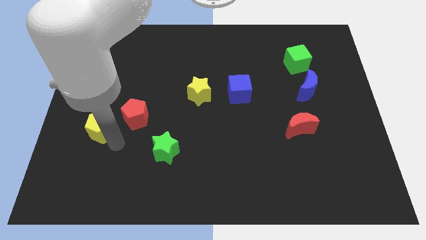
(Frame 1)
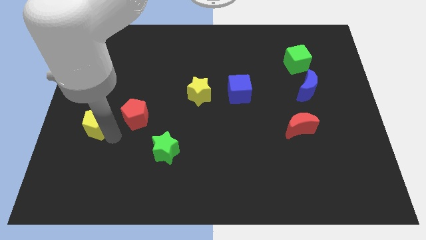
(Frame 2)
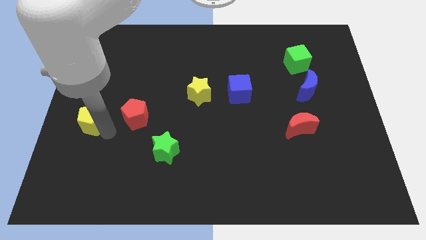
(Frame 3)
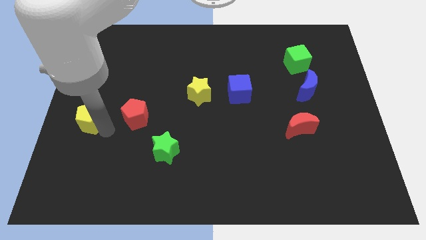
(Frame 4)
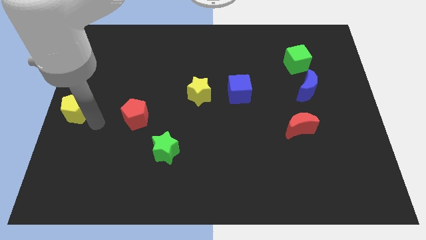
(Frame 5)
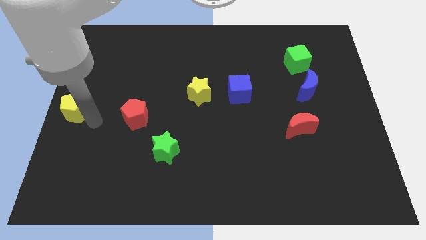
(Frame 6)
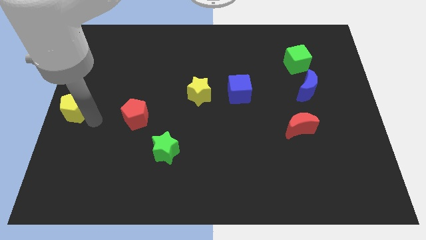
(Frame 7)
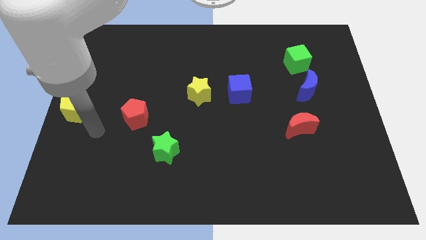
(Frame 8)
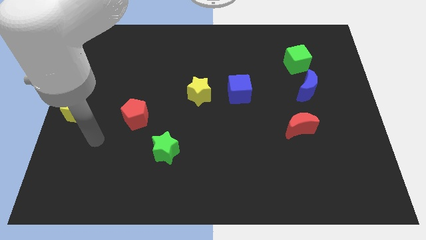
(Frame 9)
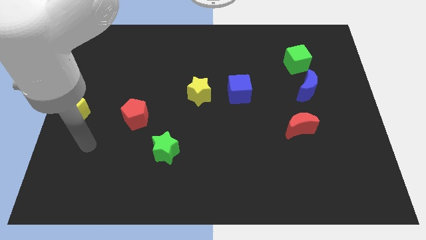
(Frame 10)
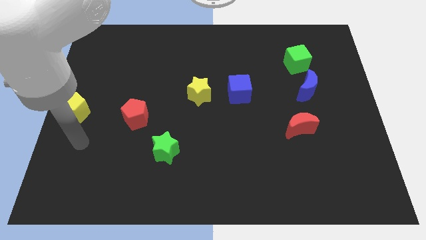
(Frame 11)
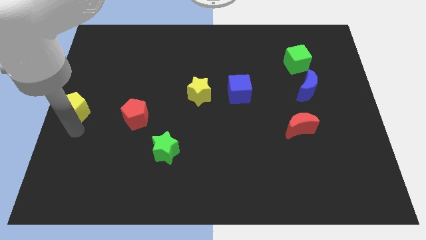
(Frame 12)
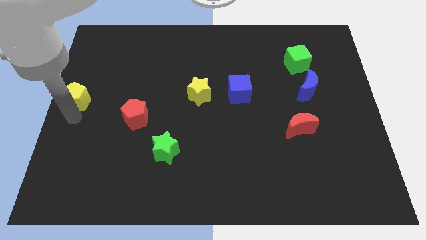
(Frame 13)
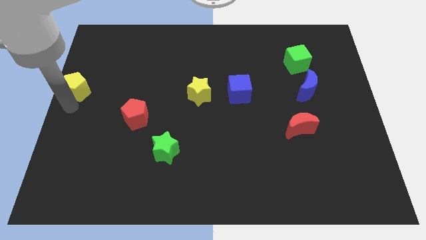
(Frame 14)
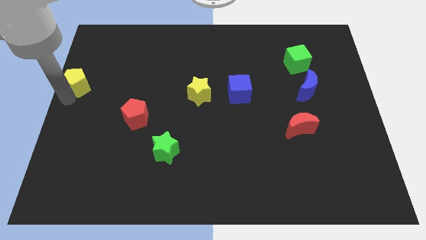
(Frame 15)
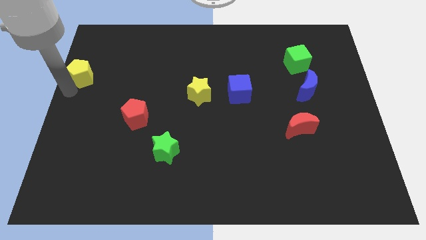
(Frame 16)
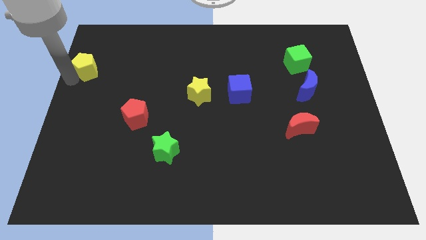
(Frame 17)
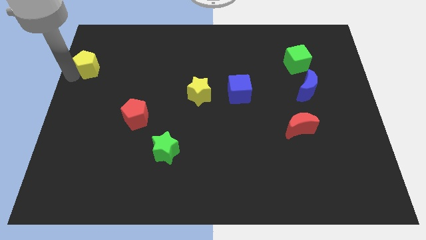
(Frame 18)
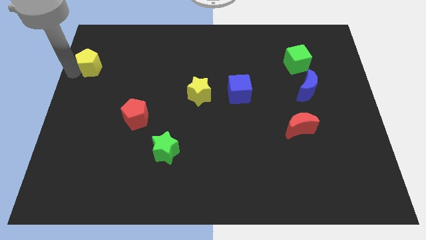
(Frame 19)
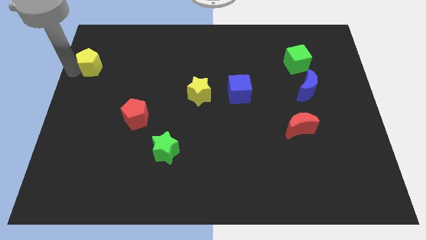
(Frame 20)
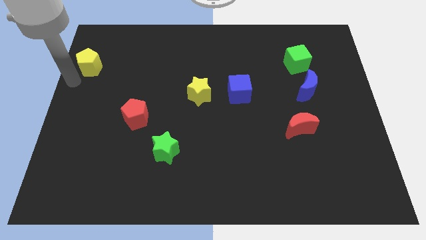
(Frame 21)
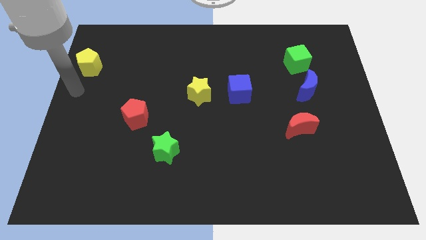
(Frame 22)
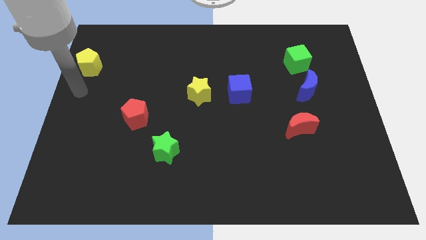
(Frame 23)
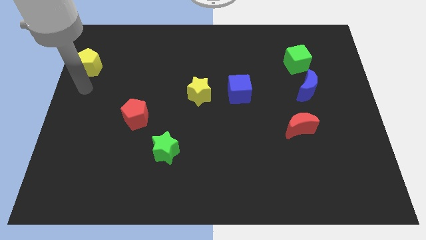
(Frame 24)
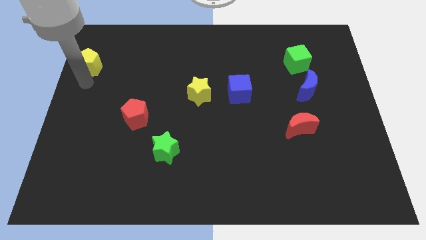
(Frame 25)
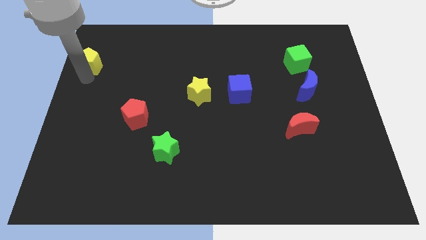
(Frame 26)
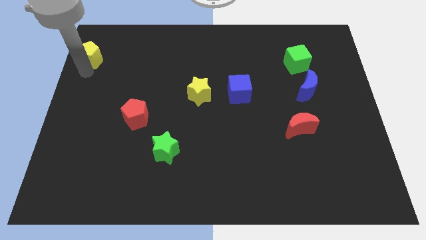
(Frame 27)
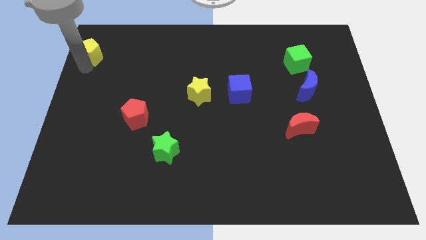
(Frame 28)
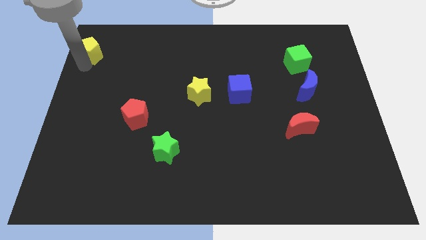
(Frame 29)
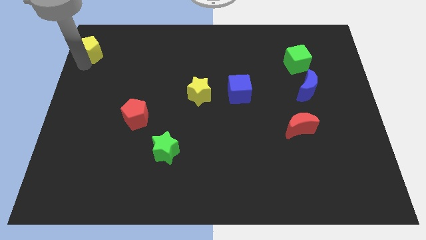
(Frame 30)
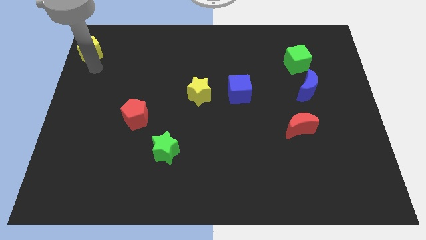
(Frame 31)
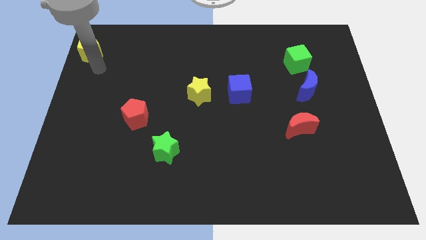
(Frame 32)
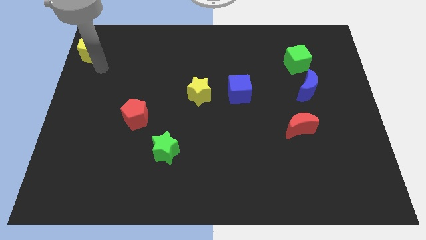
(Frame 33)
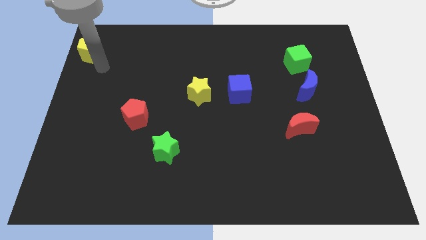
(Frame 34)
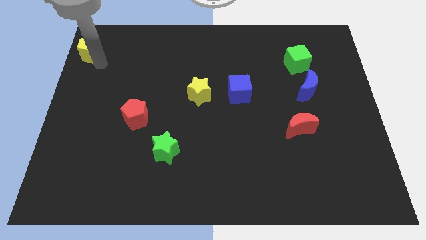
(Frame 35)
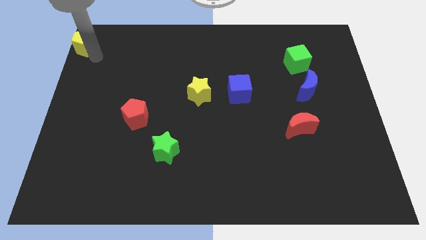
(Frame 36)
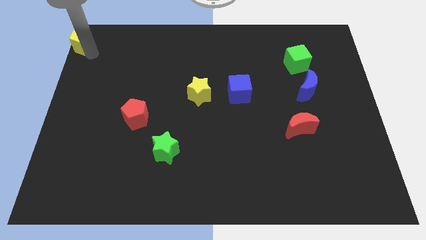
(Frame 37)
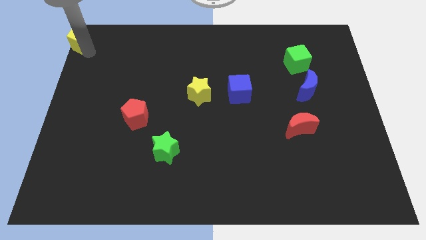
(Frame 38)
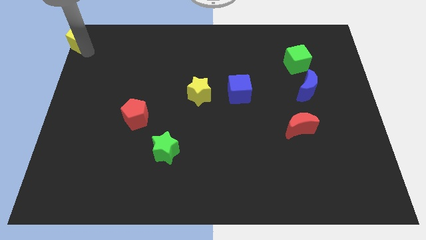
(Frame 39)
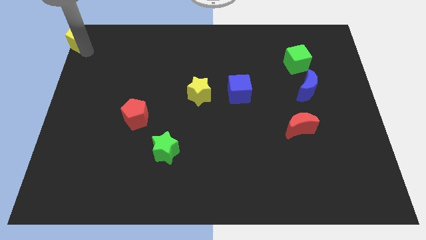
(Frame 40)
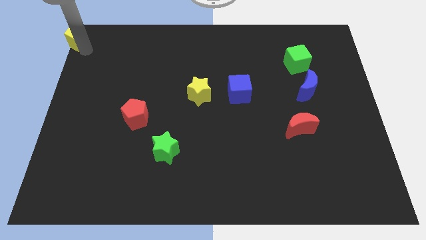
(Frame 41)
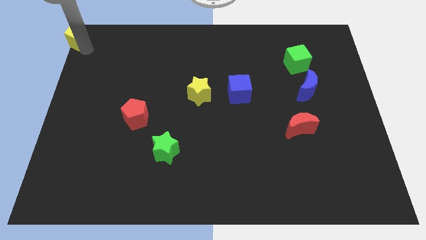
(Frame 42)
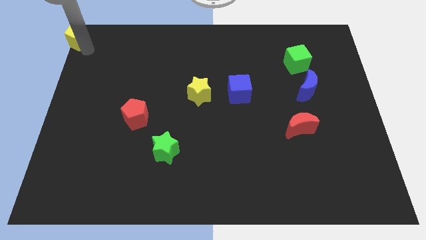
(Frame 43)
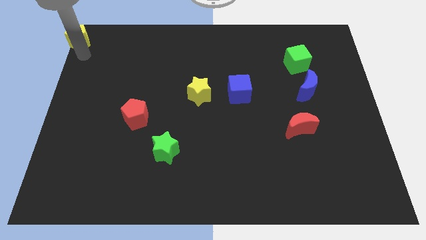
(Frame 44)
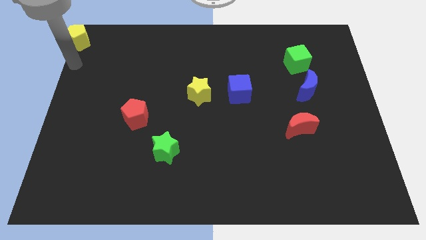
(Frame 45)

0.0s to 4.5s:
push the yellow pentagon to the top left corner of the board

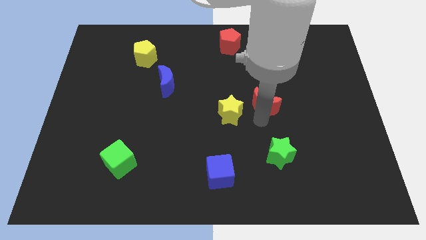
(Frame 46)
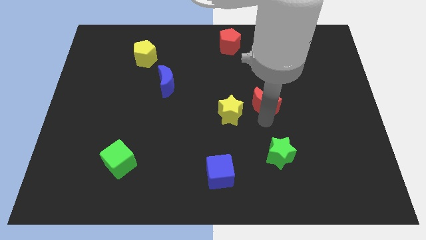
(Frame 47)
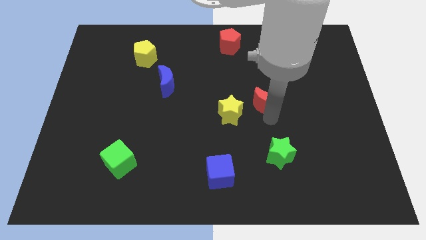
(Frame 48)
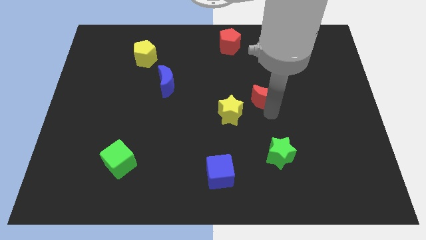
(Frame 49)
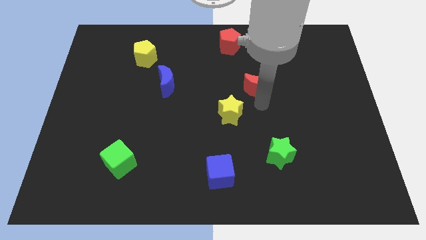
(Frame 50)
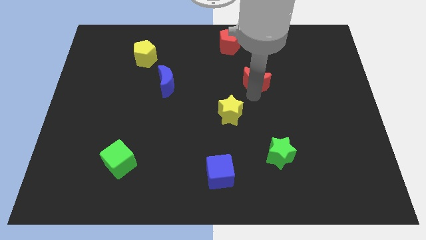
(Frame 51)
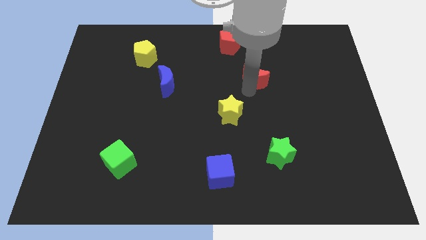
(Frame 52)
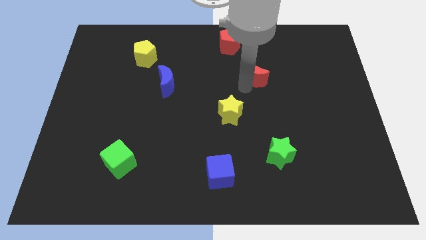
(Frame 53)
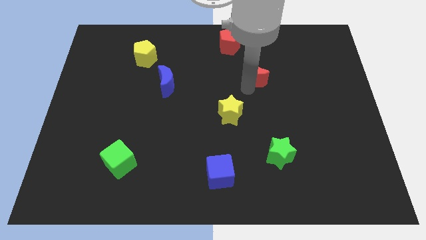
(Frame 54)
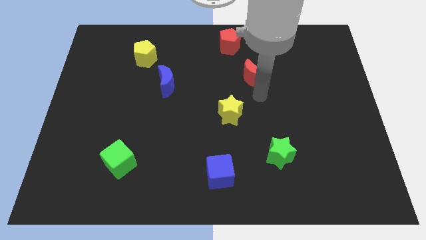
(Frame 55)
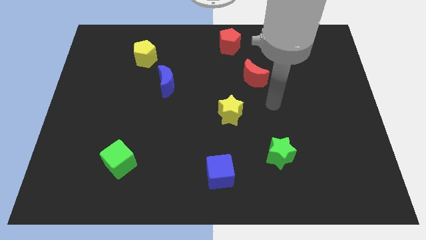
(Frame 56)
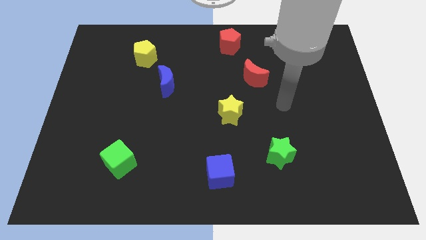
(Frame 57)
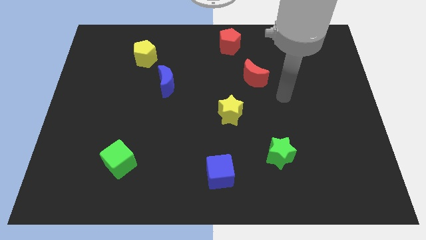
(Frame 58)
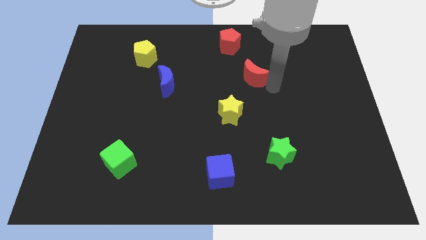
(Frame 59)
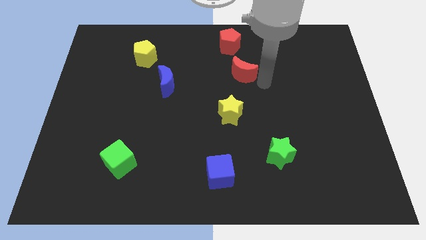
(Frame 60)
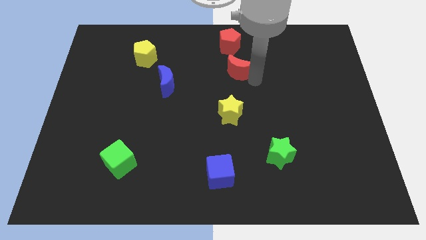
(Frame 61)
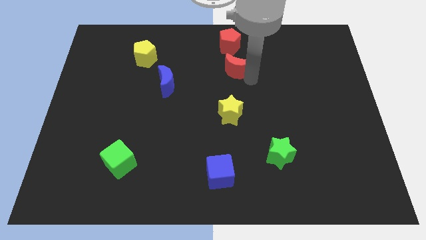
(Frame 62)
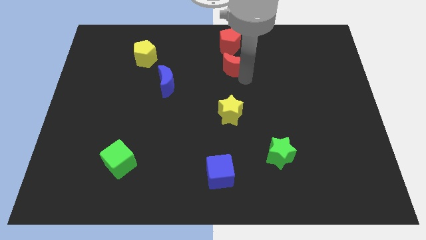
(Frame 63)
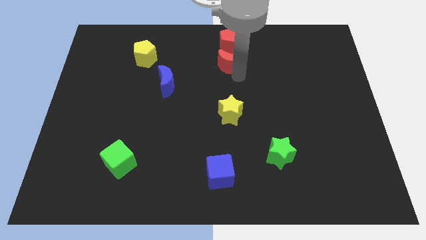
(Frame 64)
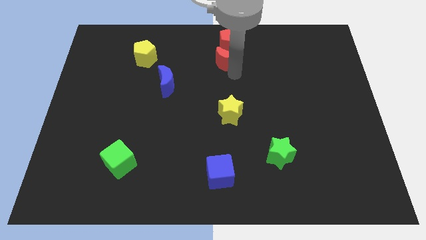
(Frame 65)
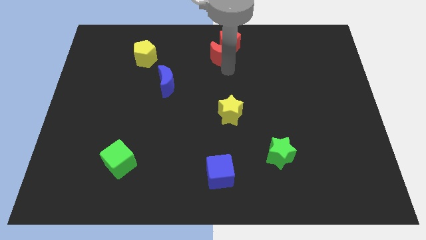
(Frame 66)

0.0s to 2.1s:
move the red moon towards the red pentagon

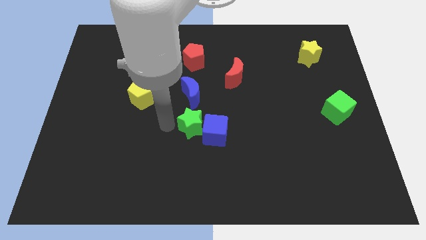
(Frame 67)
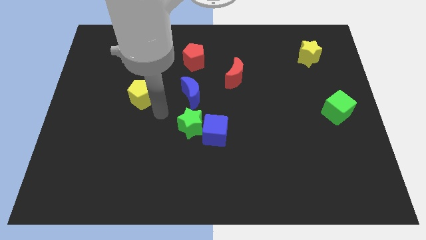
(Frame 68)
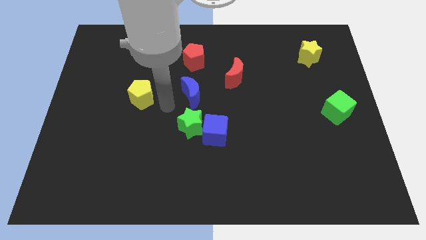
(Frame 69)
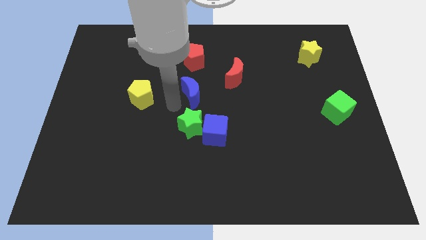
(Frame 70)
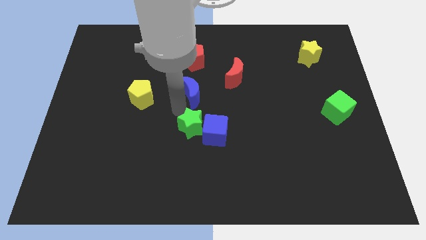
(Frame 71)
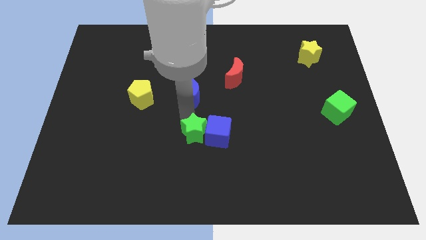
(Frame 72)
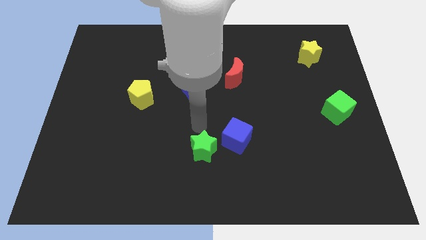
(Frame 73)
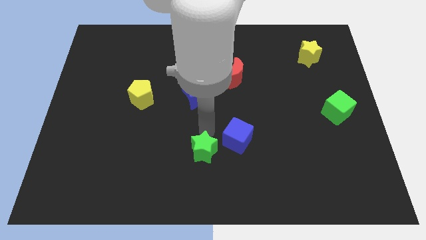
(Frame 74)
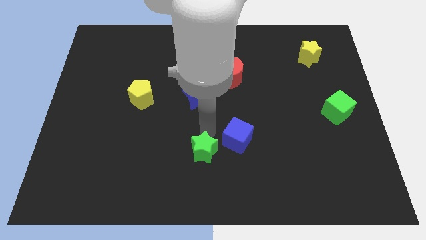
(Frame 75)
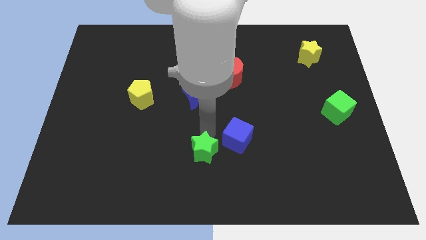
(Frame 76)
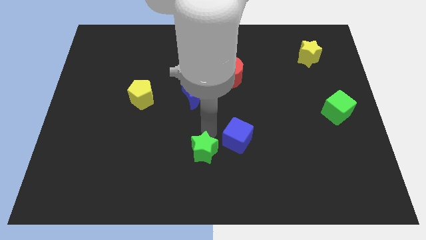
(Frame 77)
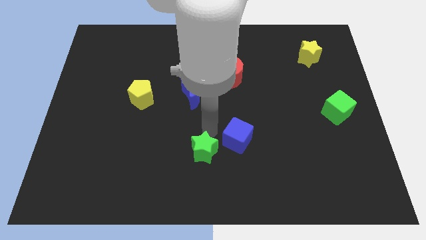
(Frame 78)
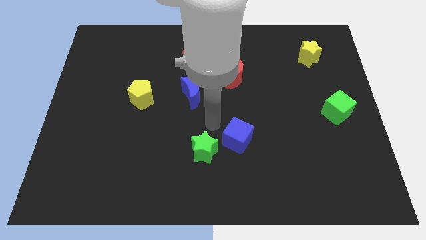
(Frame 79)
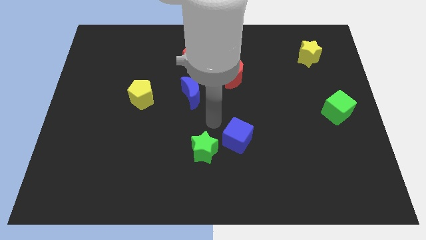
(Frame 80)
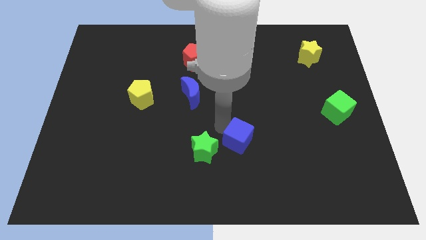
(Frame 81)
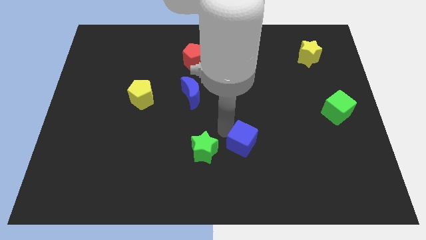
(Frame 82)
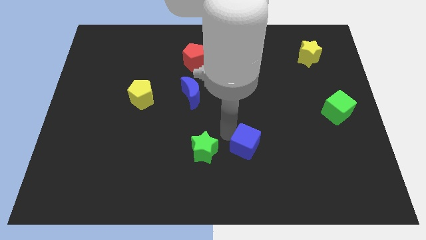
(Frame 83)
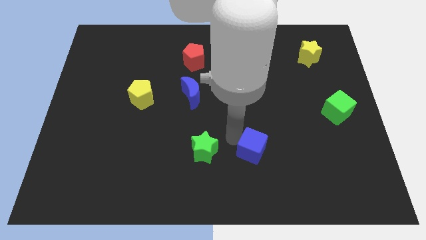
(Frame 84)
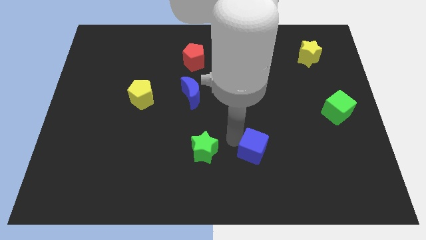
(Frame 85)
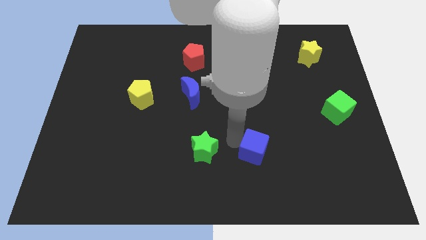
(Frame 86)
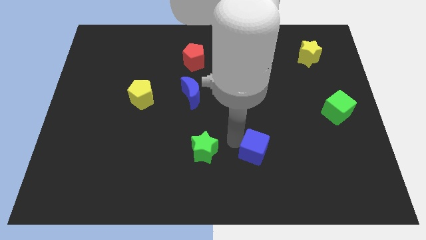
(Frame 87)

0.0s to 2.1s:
separate the green star and blue cube from each other

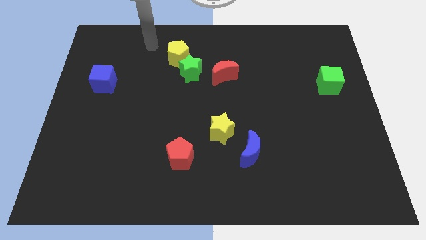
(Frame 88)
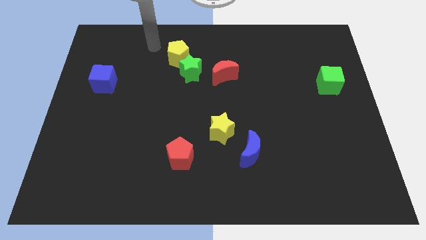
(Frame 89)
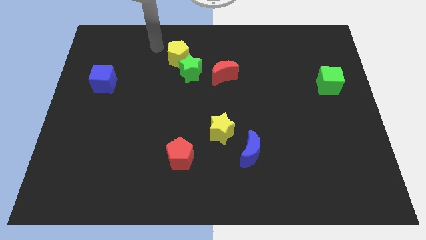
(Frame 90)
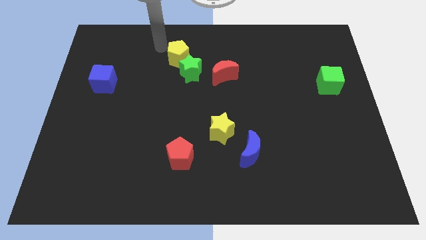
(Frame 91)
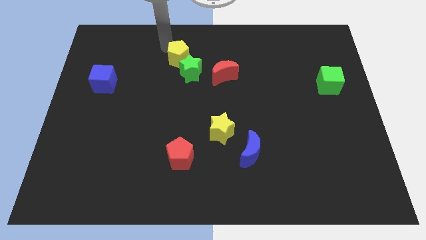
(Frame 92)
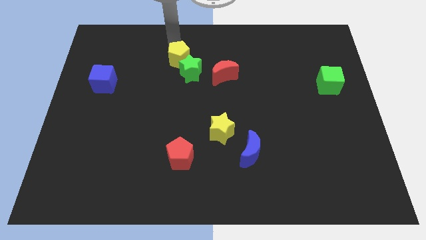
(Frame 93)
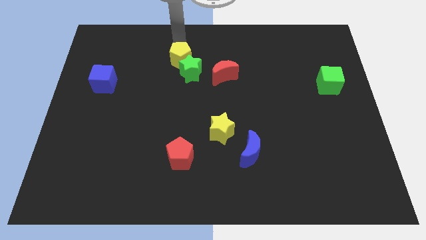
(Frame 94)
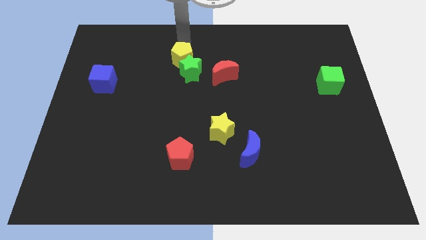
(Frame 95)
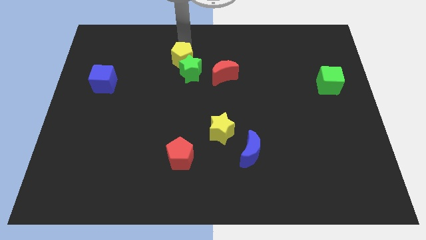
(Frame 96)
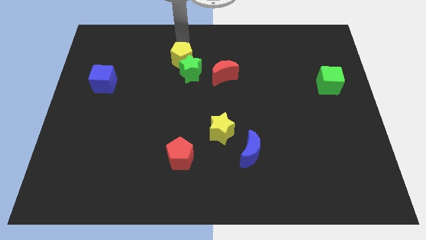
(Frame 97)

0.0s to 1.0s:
push yellow pentagon into green star
